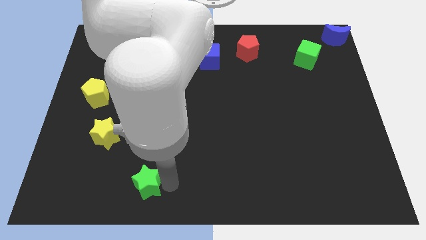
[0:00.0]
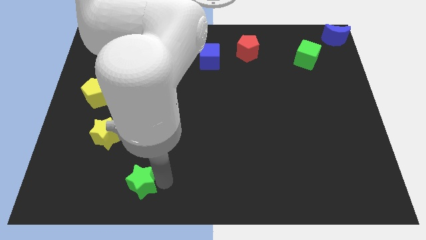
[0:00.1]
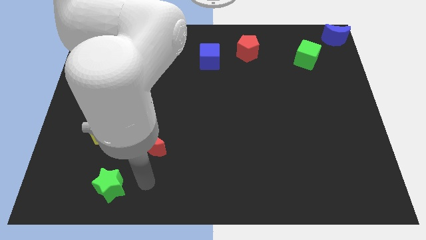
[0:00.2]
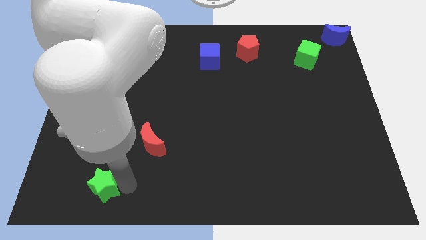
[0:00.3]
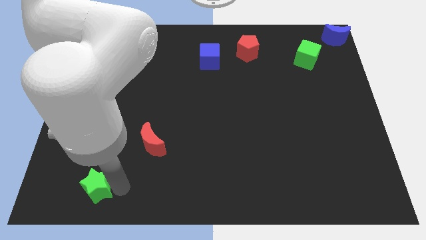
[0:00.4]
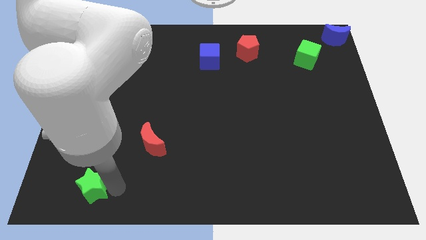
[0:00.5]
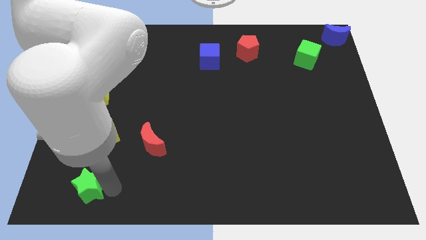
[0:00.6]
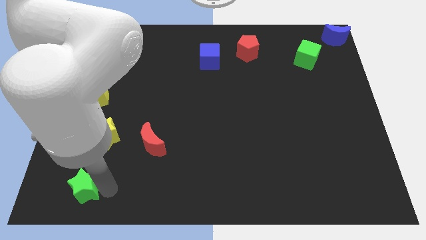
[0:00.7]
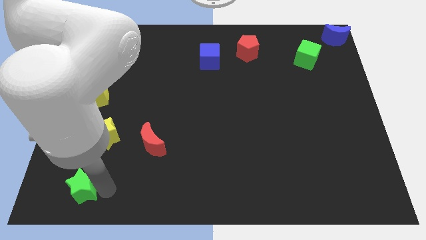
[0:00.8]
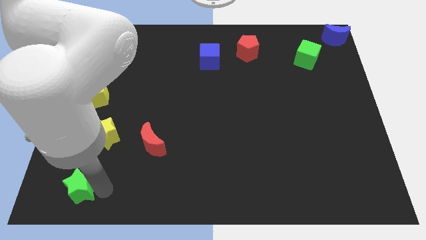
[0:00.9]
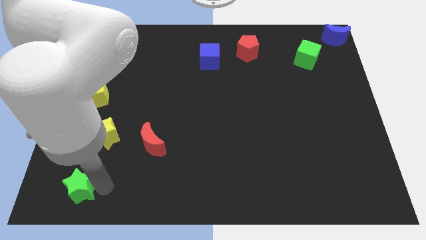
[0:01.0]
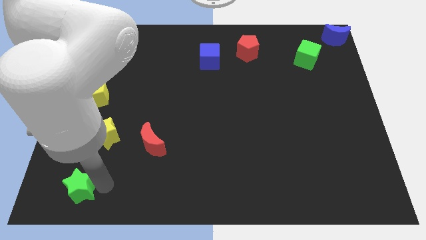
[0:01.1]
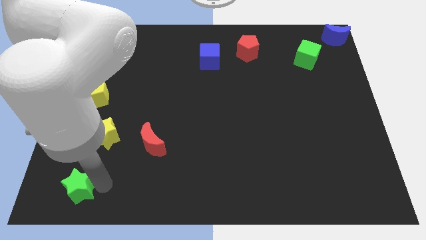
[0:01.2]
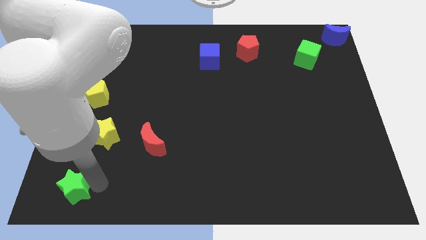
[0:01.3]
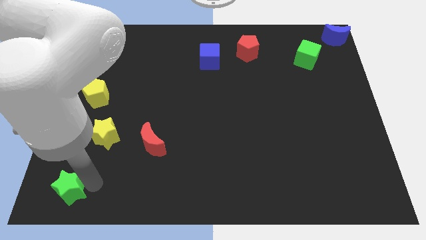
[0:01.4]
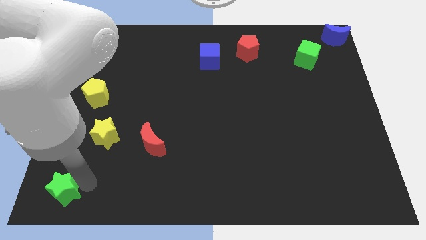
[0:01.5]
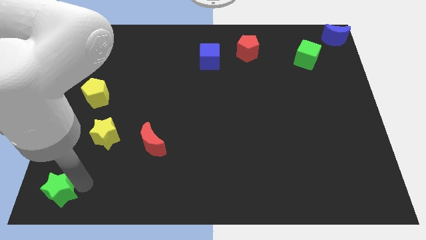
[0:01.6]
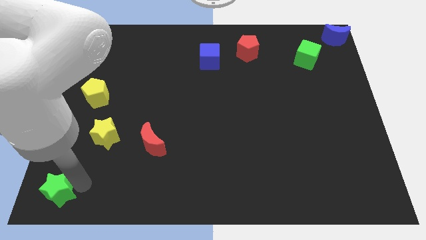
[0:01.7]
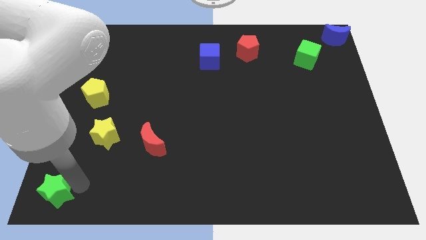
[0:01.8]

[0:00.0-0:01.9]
place the green star towards the bottom left corner of the board

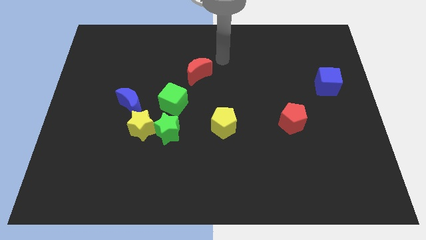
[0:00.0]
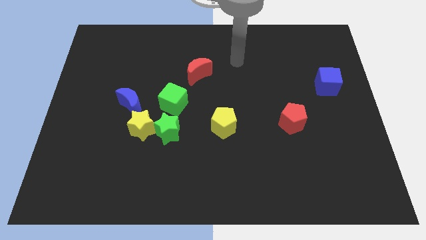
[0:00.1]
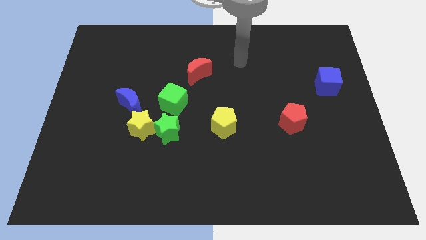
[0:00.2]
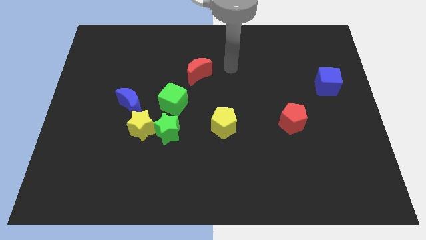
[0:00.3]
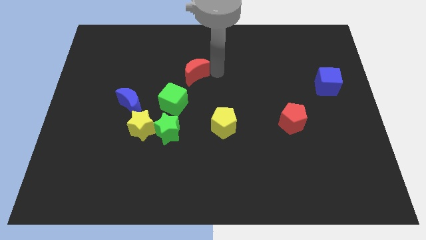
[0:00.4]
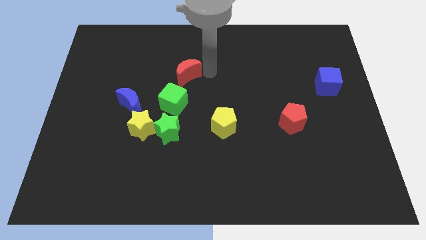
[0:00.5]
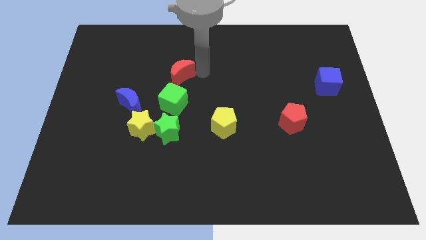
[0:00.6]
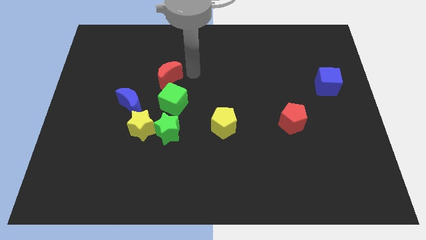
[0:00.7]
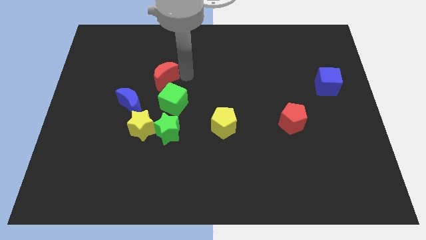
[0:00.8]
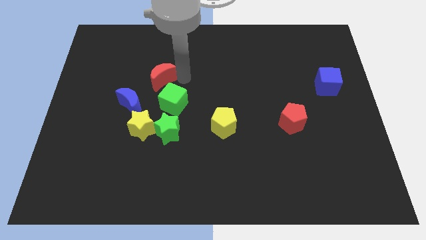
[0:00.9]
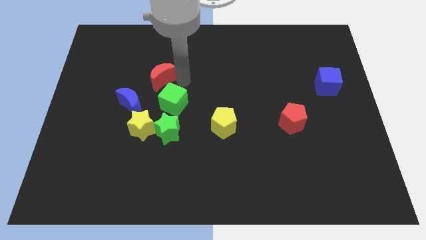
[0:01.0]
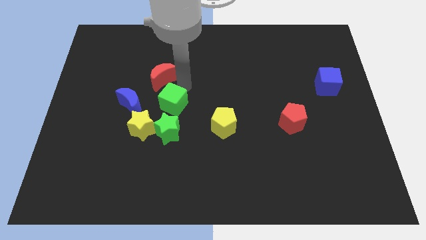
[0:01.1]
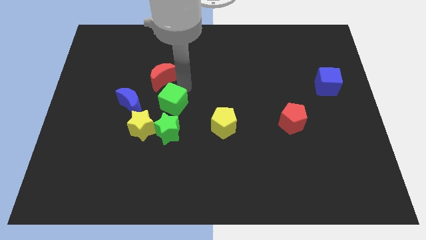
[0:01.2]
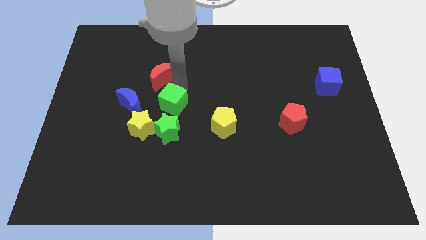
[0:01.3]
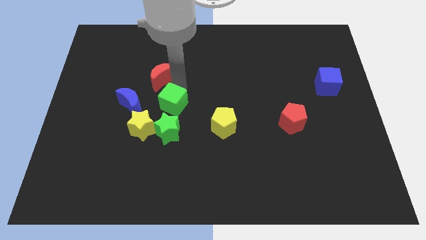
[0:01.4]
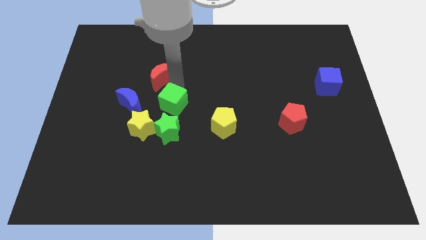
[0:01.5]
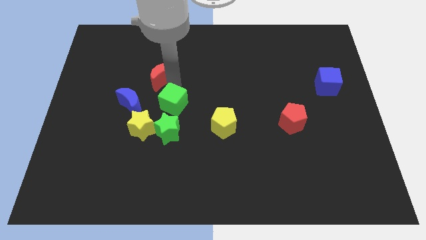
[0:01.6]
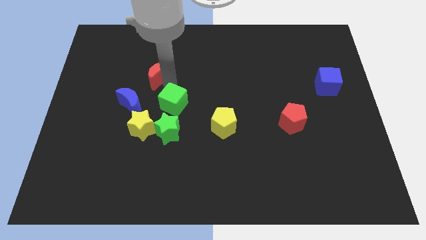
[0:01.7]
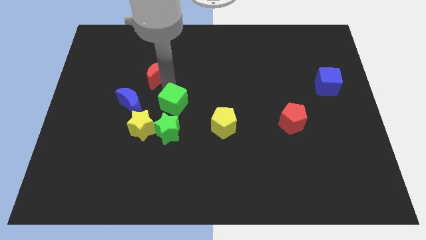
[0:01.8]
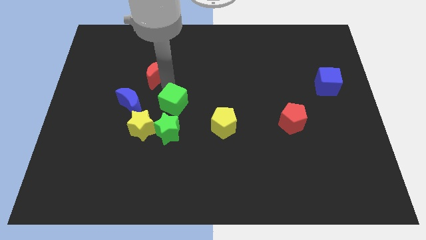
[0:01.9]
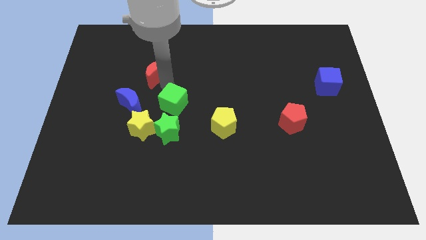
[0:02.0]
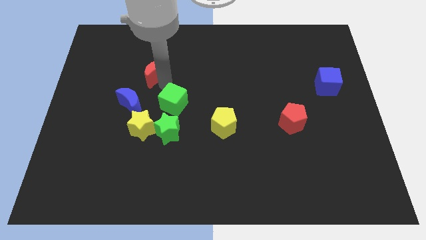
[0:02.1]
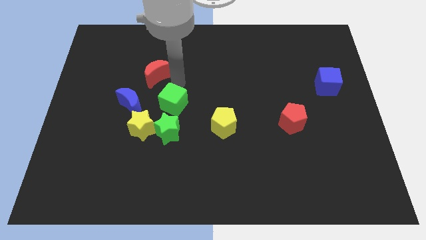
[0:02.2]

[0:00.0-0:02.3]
make an triangle by placing red moon

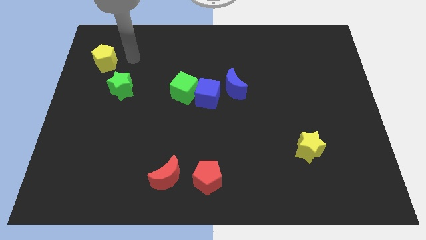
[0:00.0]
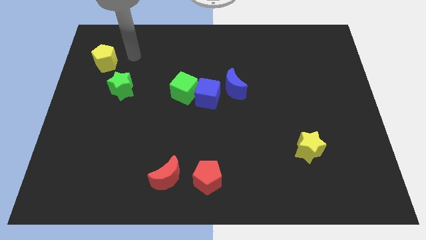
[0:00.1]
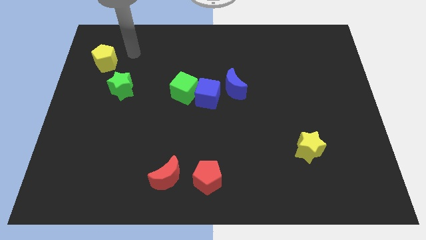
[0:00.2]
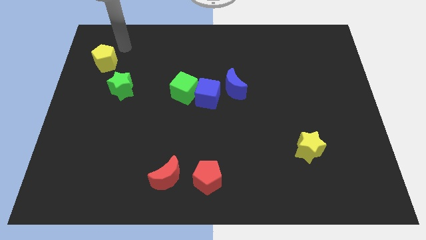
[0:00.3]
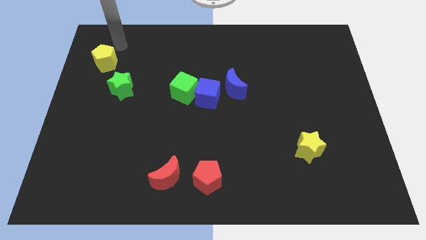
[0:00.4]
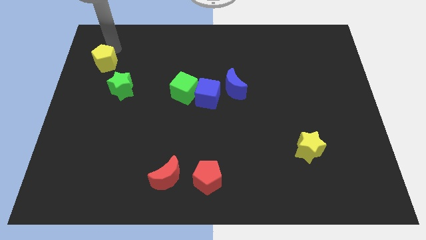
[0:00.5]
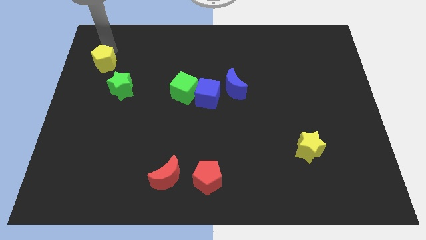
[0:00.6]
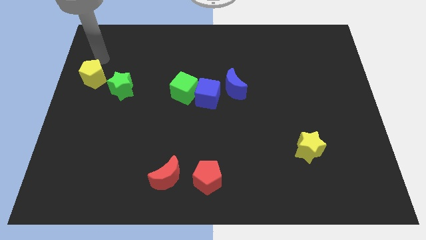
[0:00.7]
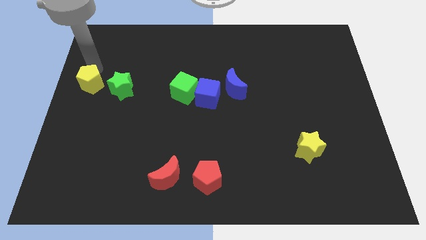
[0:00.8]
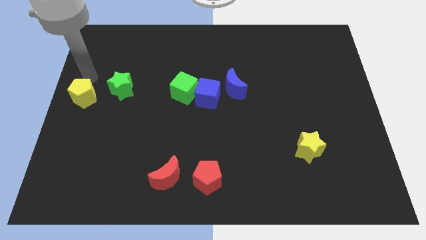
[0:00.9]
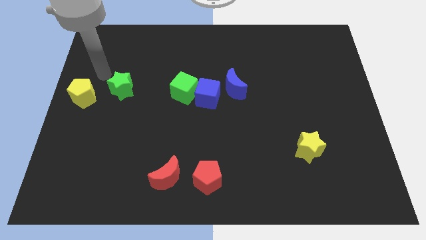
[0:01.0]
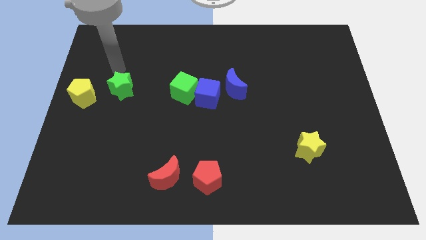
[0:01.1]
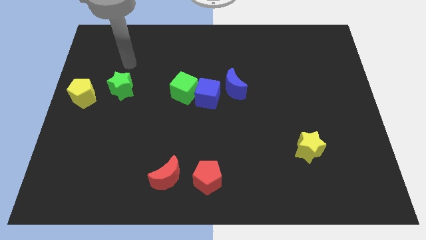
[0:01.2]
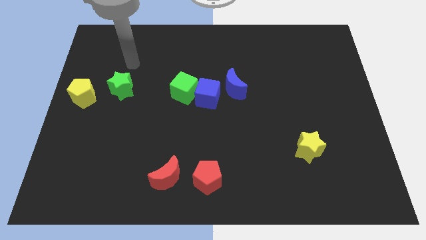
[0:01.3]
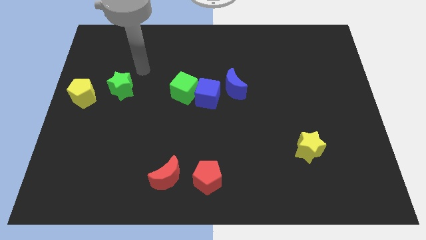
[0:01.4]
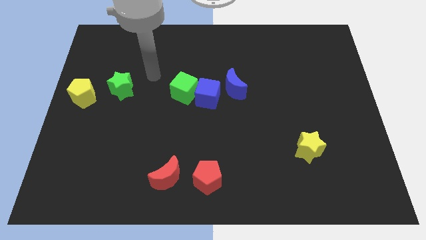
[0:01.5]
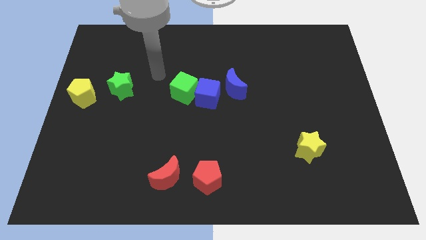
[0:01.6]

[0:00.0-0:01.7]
move the yellow pentagon towards the left center

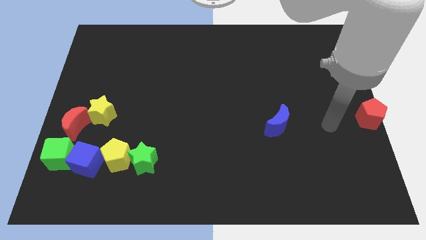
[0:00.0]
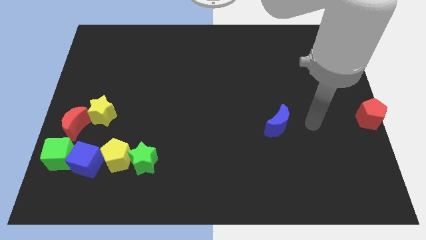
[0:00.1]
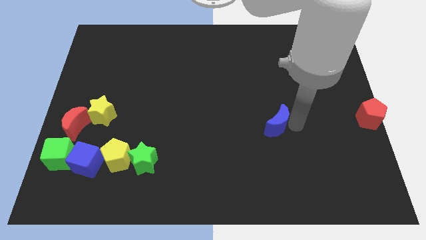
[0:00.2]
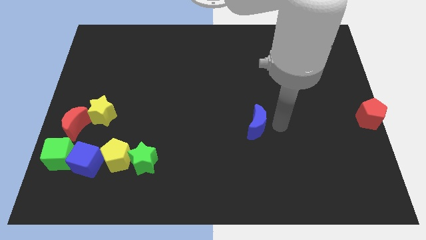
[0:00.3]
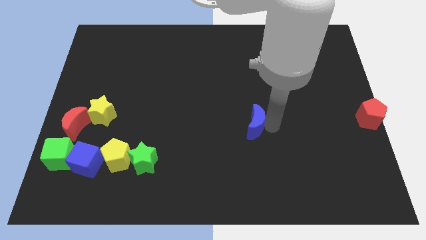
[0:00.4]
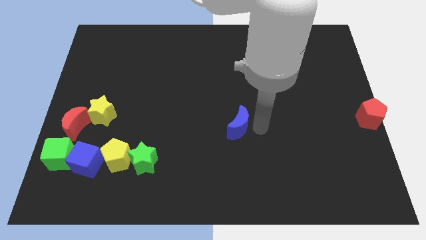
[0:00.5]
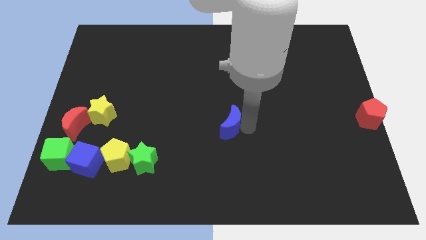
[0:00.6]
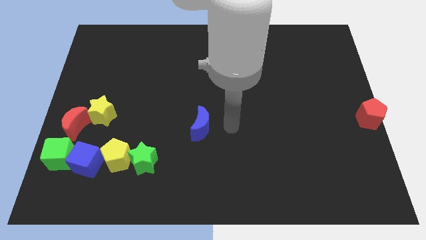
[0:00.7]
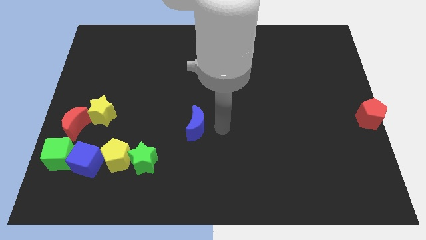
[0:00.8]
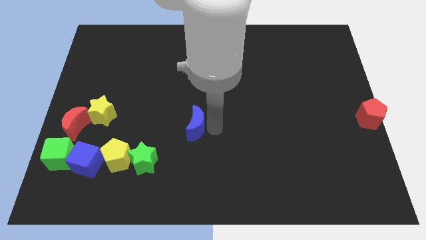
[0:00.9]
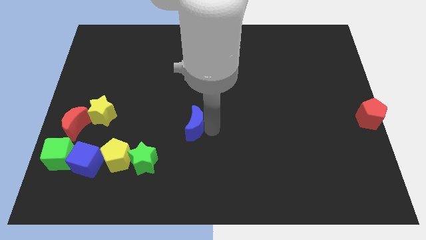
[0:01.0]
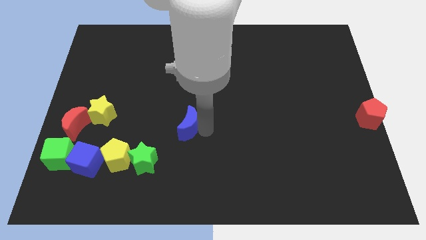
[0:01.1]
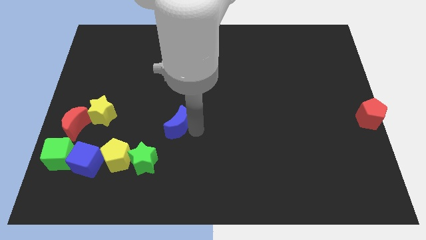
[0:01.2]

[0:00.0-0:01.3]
hit the blue moon slightly to the left side of the board

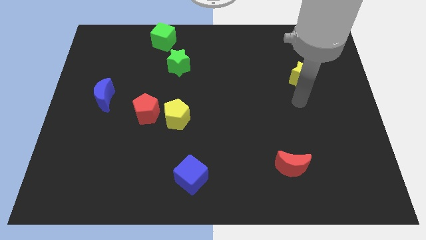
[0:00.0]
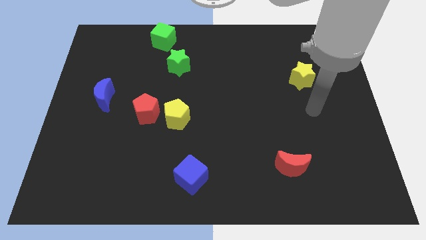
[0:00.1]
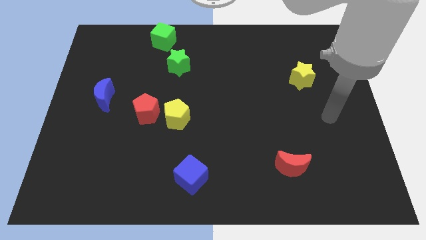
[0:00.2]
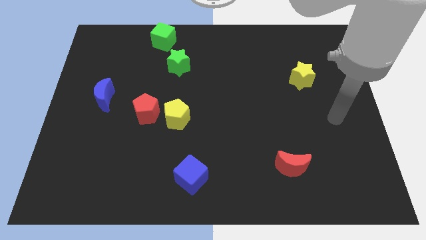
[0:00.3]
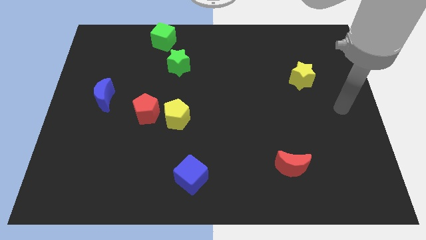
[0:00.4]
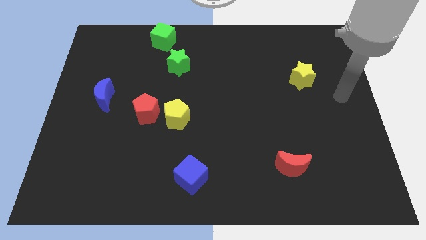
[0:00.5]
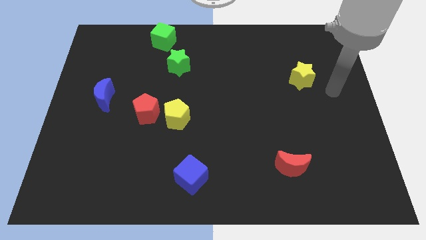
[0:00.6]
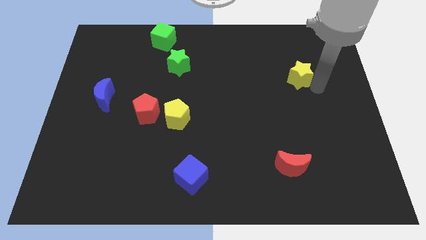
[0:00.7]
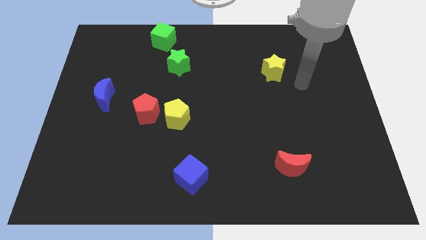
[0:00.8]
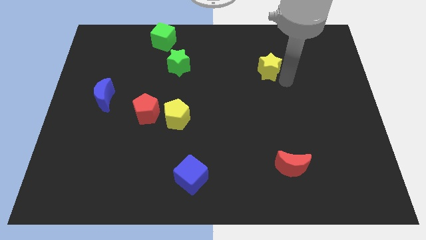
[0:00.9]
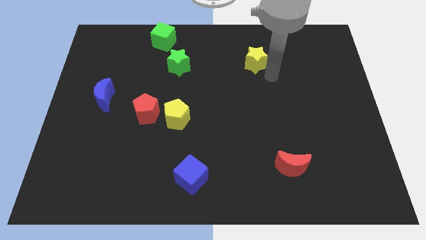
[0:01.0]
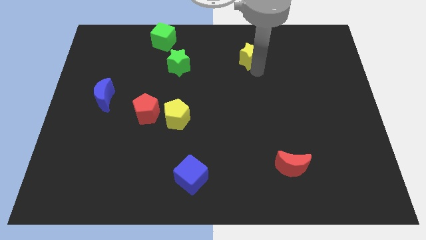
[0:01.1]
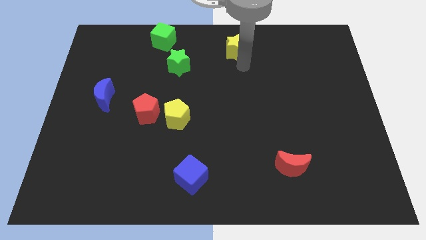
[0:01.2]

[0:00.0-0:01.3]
push the yellow star at the right side of the green star

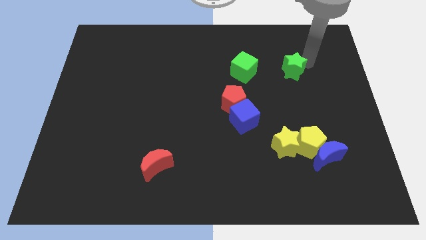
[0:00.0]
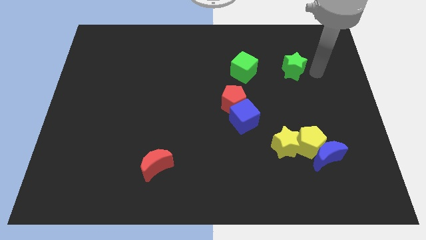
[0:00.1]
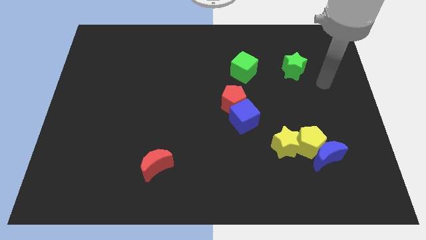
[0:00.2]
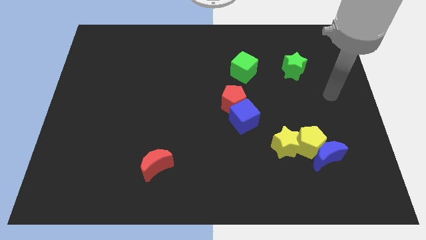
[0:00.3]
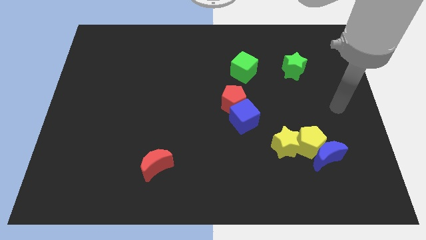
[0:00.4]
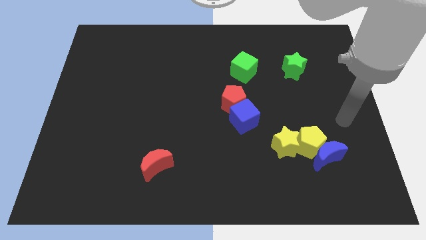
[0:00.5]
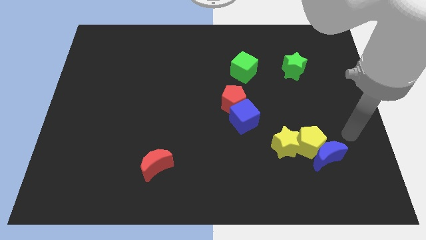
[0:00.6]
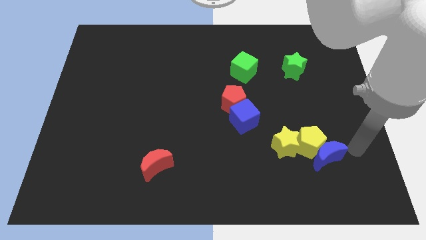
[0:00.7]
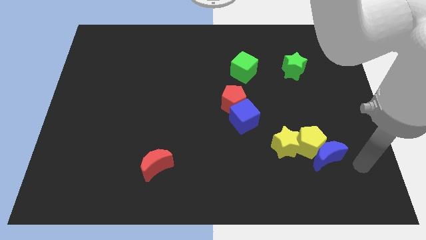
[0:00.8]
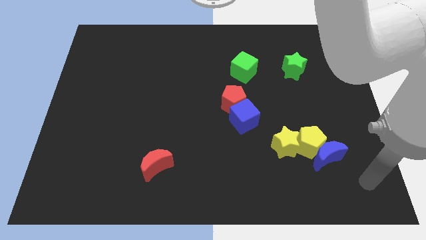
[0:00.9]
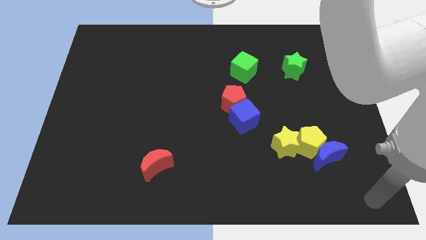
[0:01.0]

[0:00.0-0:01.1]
place your arm at the bottom right corner of the board
